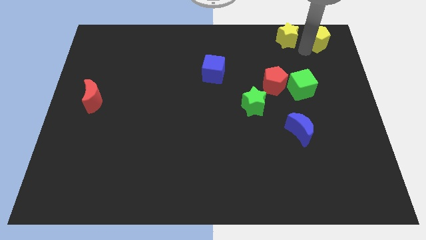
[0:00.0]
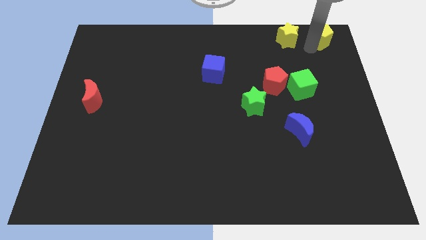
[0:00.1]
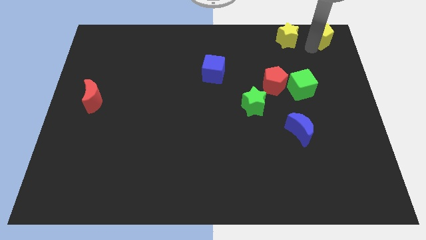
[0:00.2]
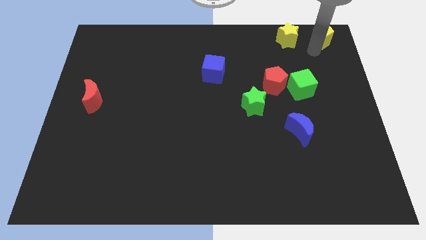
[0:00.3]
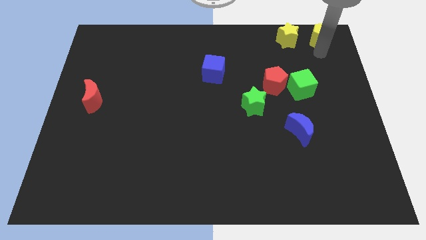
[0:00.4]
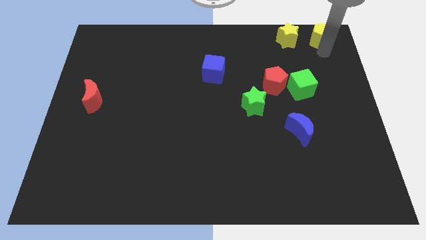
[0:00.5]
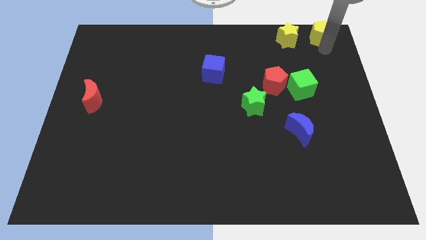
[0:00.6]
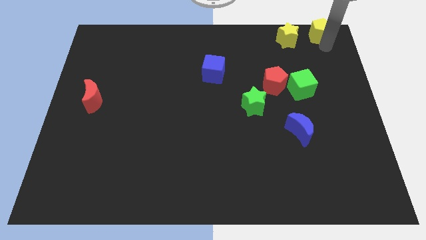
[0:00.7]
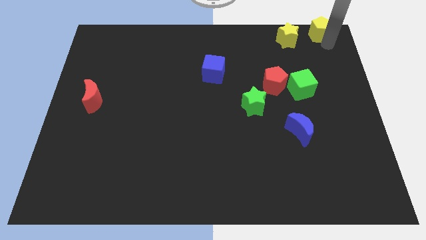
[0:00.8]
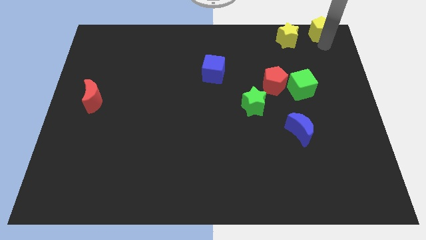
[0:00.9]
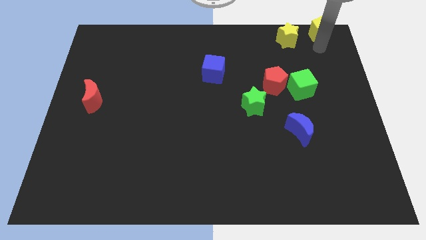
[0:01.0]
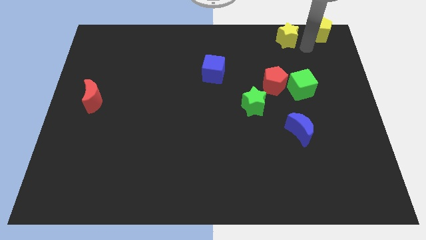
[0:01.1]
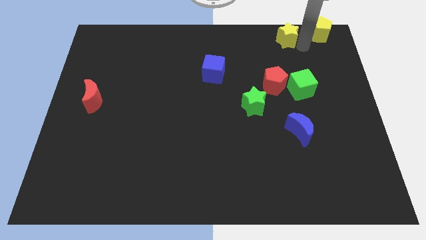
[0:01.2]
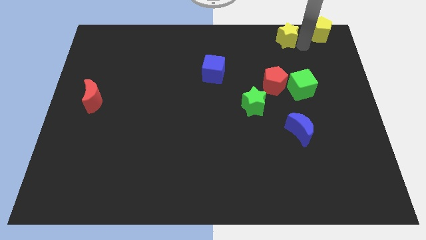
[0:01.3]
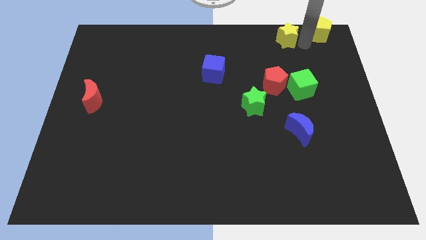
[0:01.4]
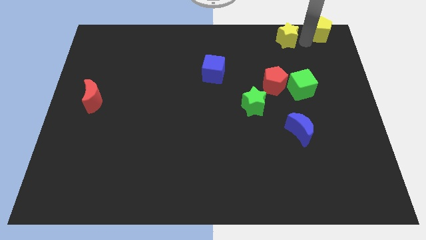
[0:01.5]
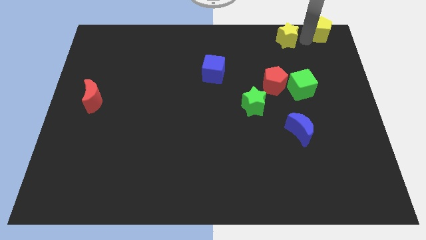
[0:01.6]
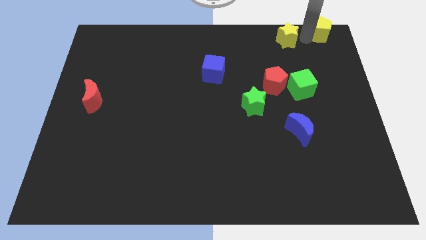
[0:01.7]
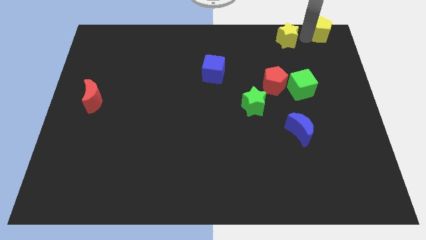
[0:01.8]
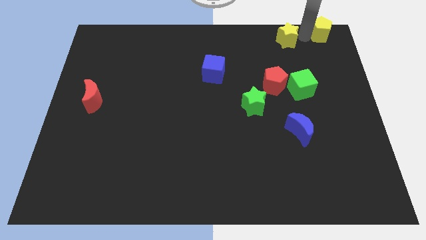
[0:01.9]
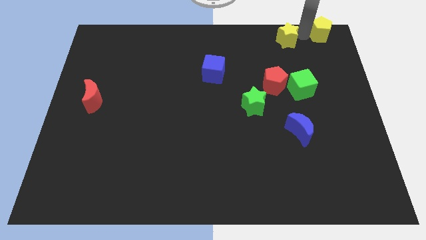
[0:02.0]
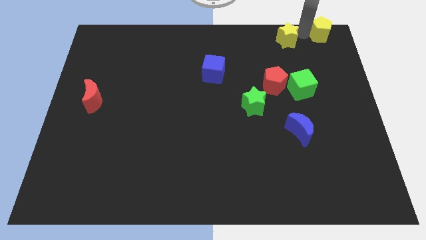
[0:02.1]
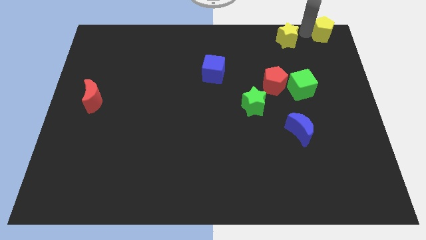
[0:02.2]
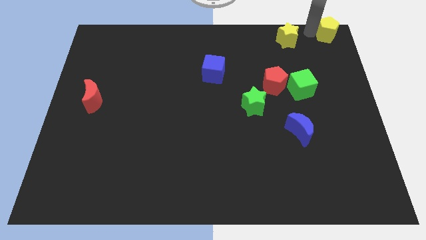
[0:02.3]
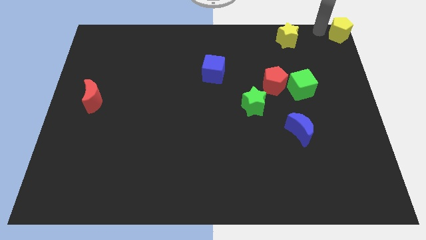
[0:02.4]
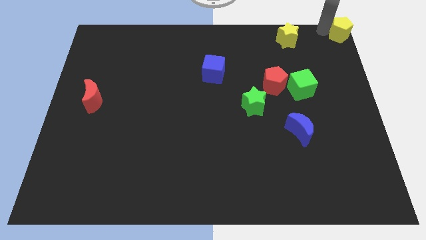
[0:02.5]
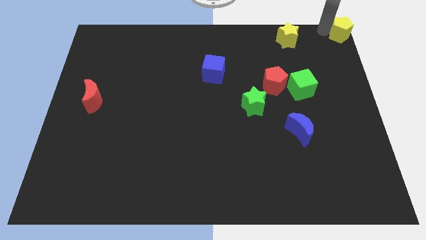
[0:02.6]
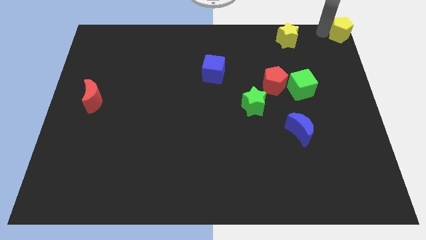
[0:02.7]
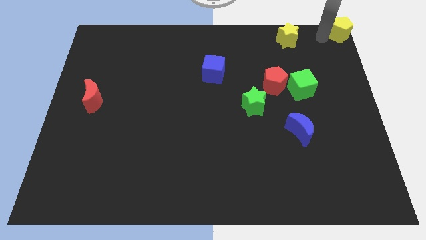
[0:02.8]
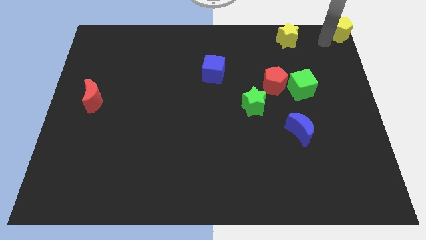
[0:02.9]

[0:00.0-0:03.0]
move the yellow pentagon towards the top right side of the board

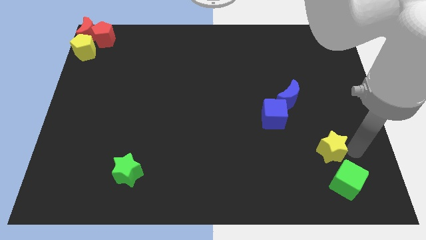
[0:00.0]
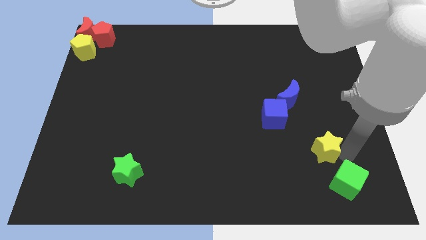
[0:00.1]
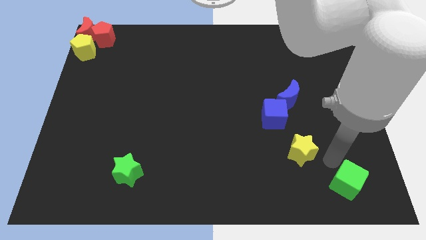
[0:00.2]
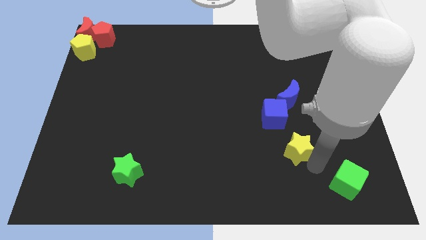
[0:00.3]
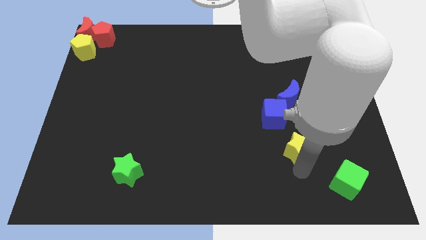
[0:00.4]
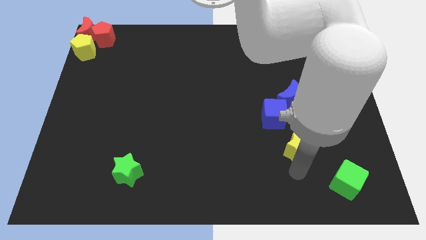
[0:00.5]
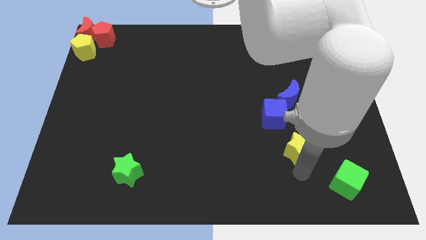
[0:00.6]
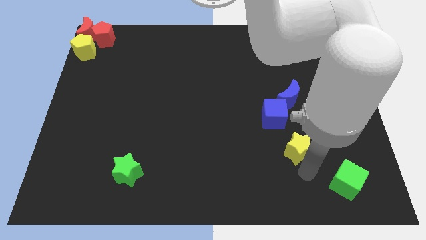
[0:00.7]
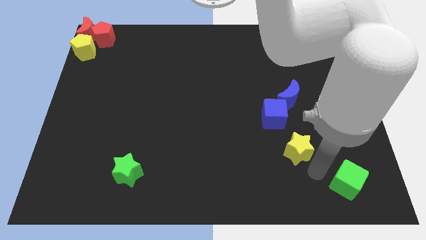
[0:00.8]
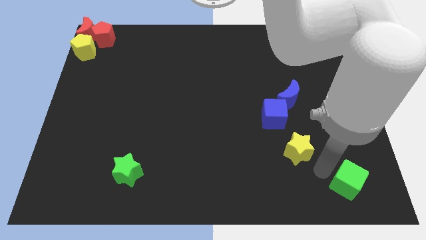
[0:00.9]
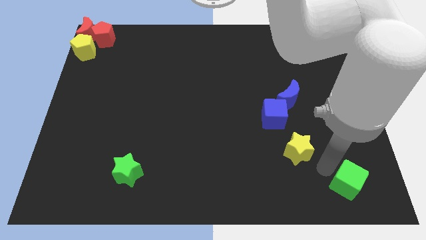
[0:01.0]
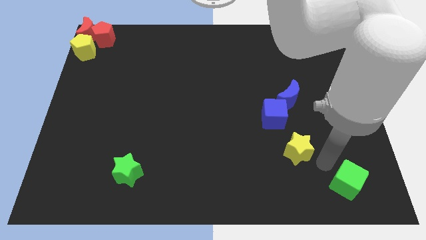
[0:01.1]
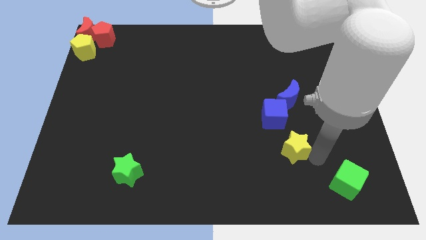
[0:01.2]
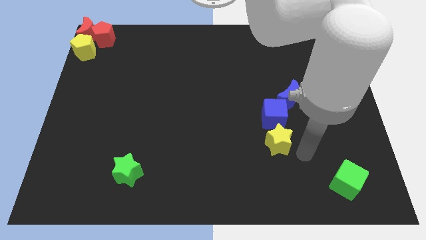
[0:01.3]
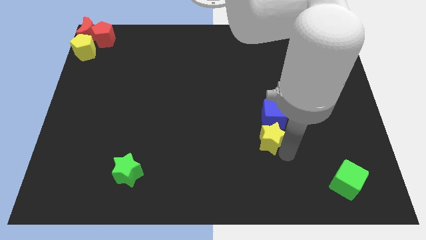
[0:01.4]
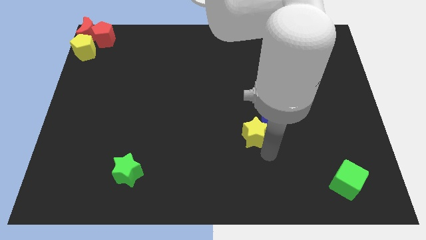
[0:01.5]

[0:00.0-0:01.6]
place the yellow star below the blue cube

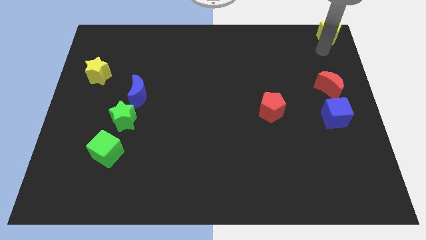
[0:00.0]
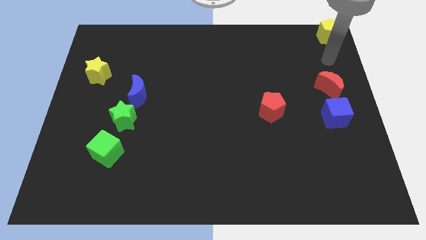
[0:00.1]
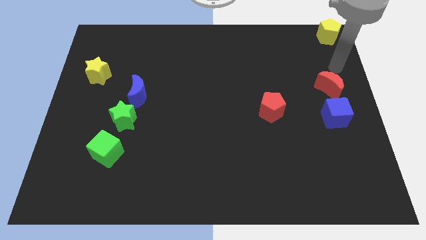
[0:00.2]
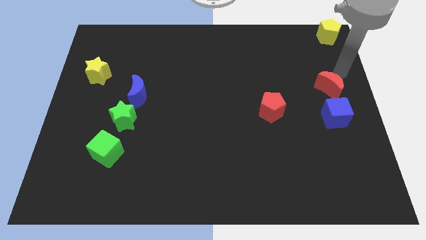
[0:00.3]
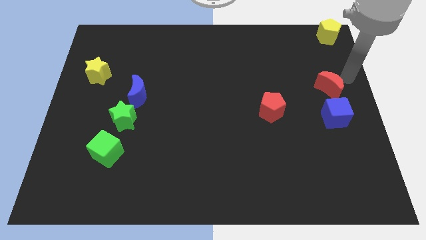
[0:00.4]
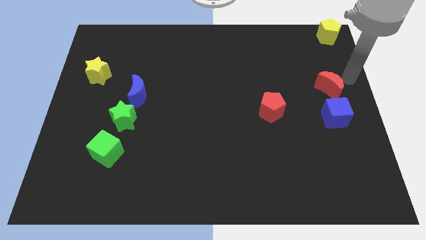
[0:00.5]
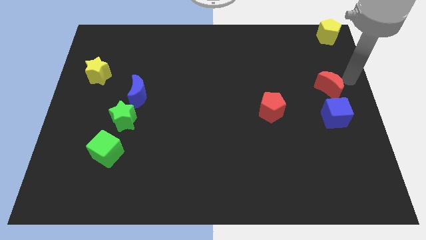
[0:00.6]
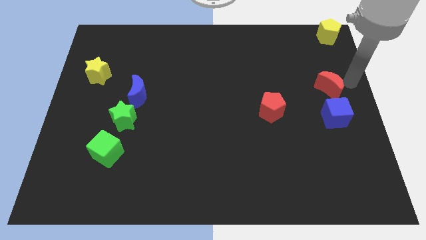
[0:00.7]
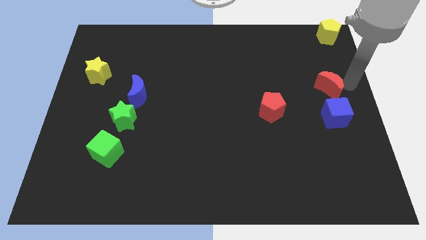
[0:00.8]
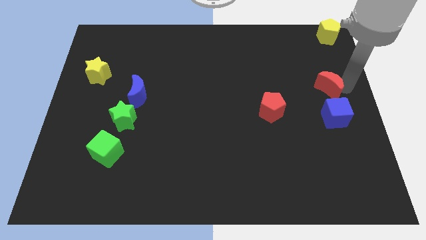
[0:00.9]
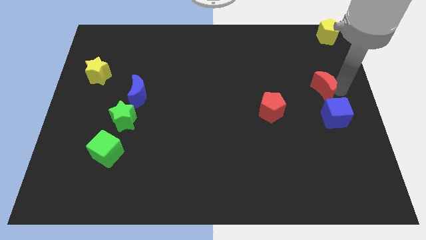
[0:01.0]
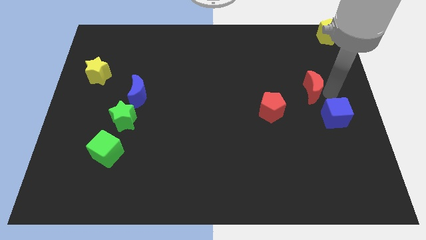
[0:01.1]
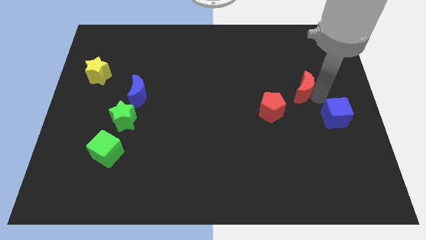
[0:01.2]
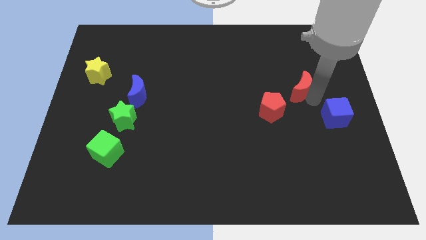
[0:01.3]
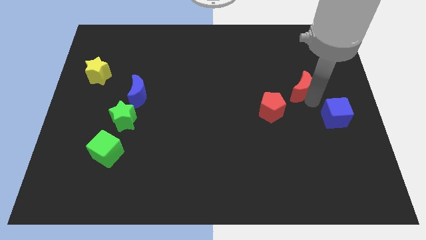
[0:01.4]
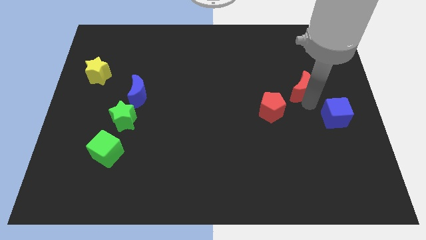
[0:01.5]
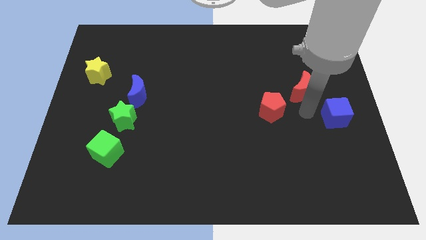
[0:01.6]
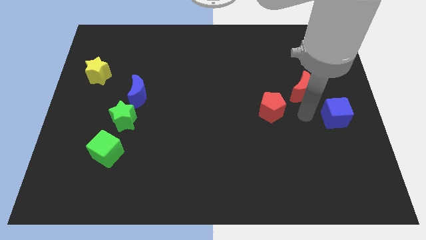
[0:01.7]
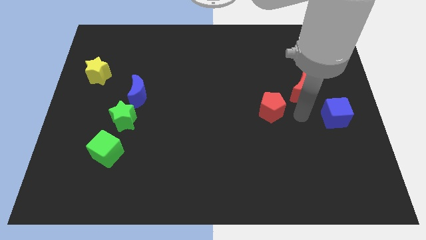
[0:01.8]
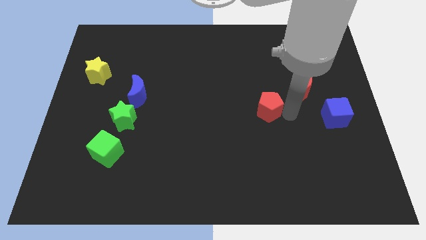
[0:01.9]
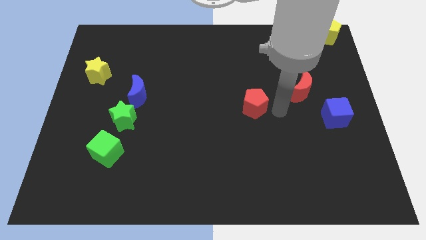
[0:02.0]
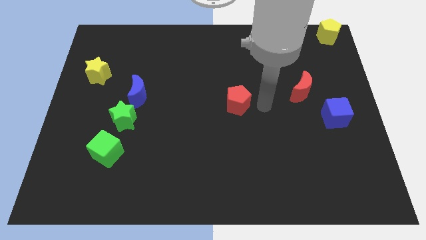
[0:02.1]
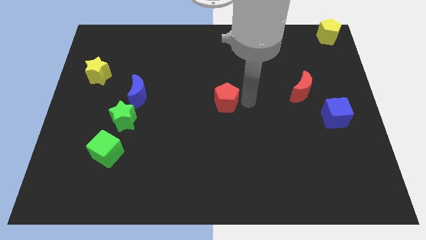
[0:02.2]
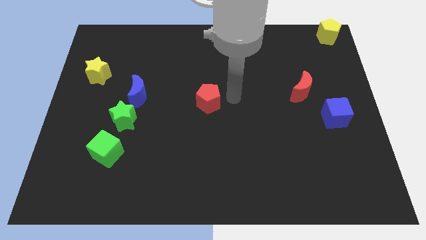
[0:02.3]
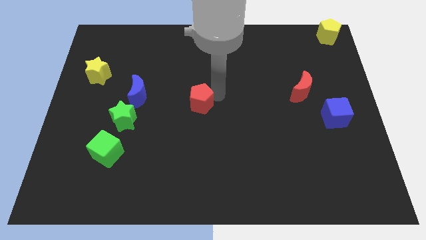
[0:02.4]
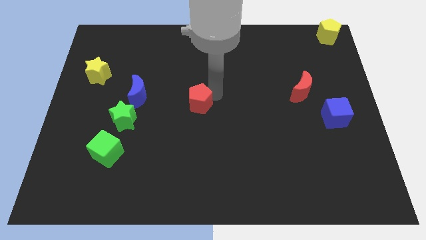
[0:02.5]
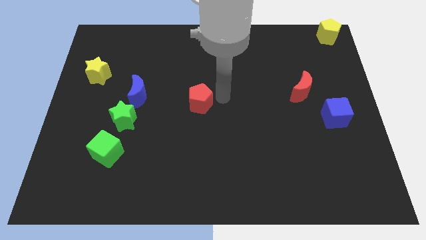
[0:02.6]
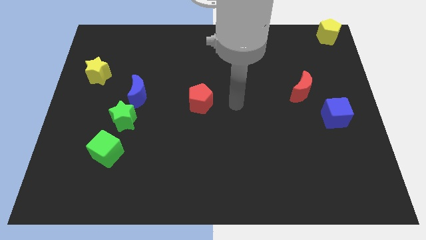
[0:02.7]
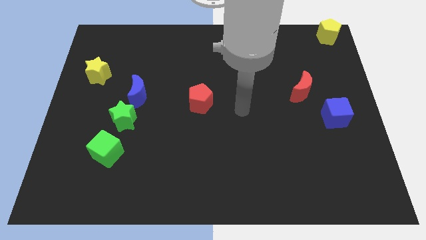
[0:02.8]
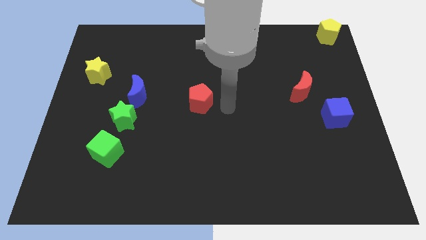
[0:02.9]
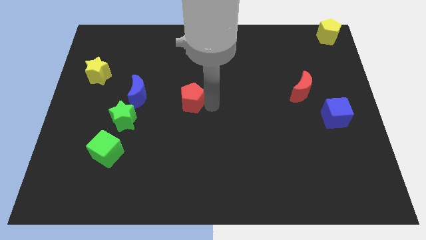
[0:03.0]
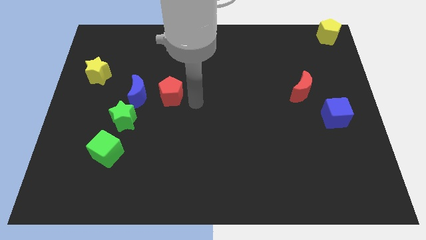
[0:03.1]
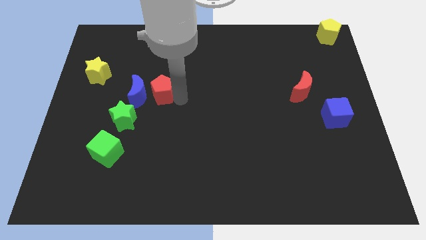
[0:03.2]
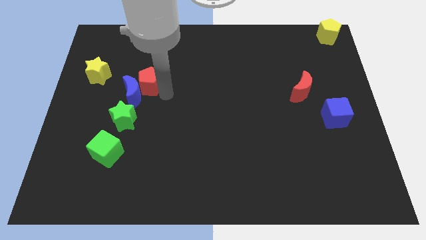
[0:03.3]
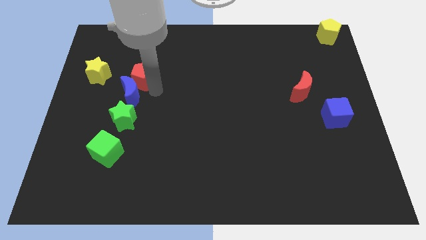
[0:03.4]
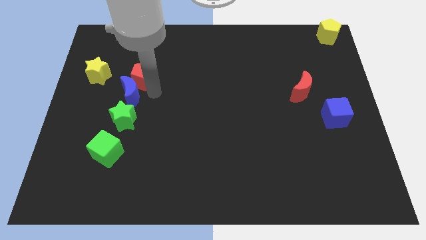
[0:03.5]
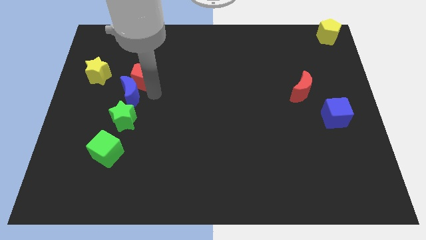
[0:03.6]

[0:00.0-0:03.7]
push the red pentagon into the blue crescent

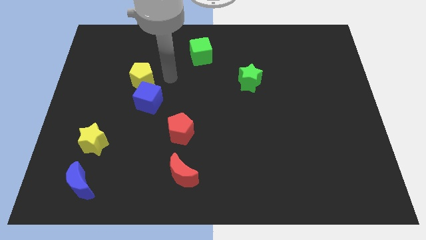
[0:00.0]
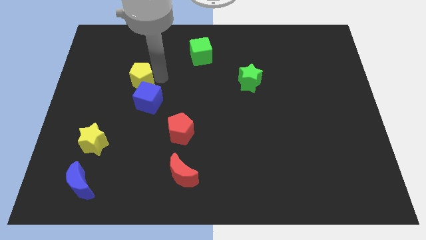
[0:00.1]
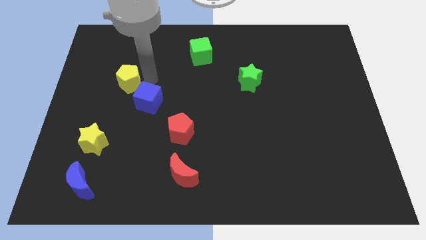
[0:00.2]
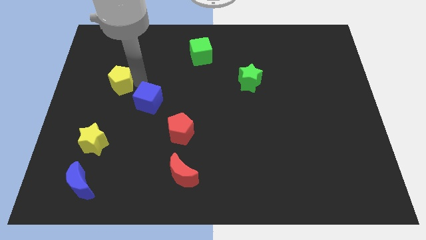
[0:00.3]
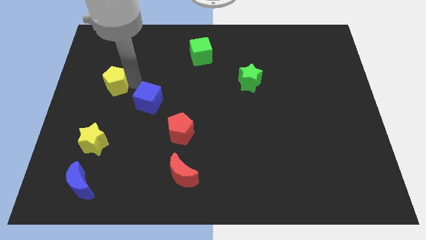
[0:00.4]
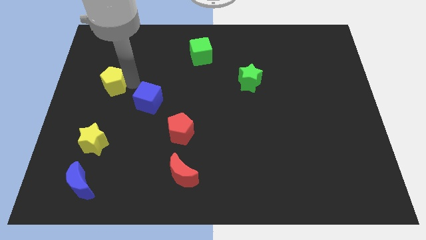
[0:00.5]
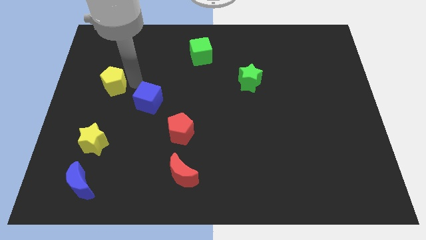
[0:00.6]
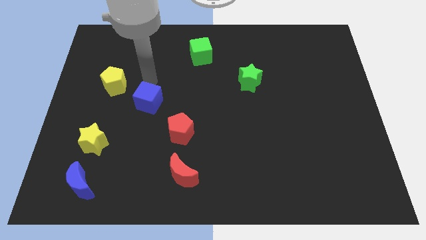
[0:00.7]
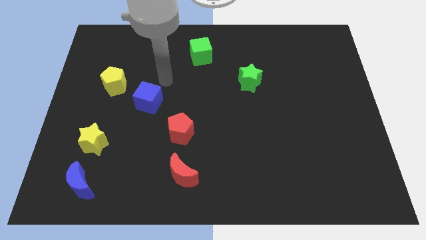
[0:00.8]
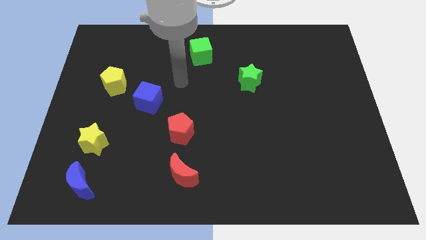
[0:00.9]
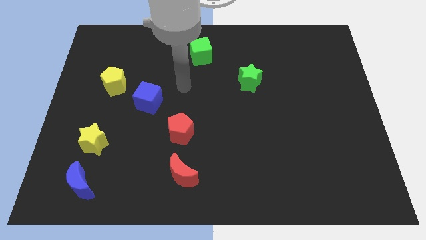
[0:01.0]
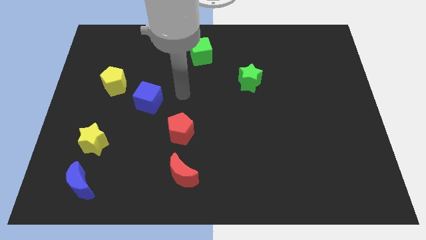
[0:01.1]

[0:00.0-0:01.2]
push the yellow pentagon above the yellow star
